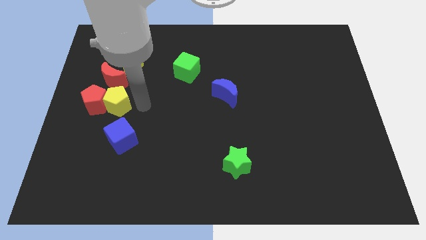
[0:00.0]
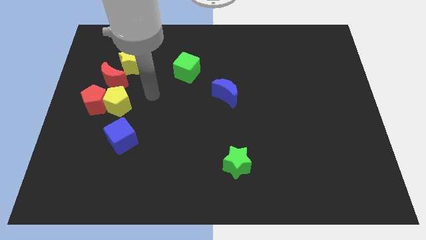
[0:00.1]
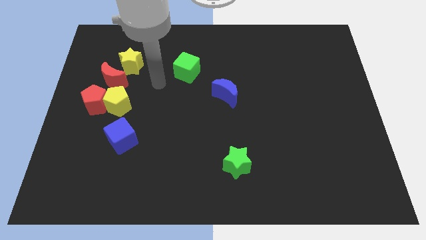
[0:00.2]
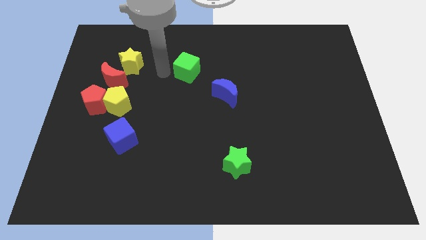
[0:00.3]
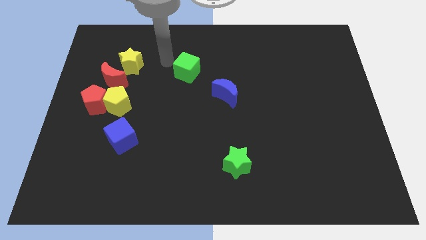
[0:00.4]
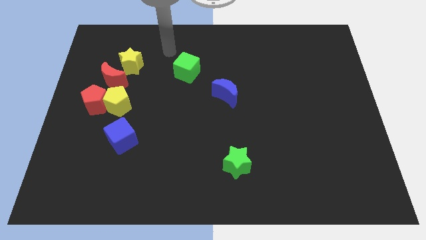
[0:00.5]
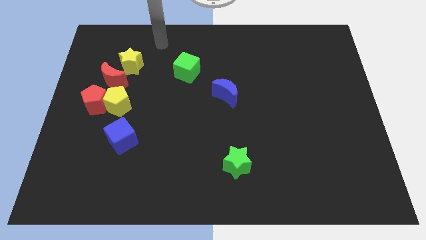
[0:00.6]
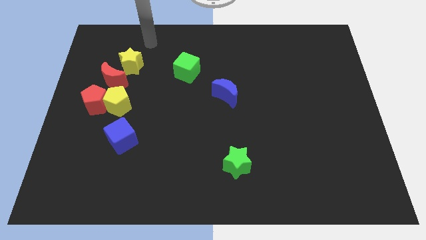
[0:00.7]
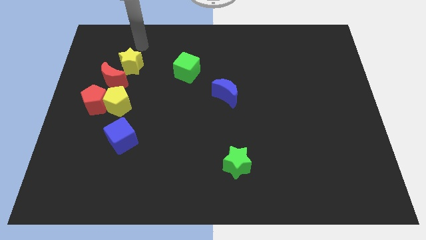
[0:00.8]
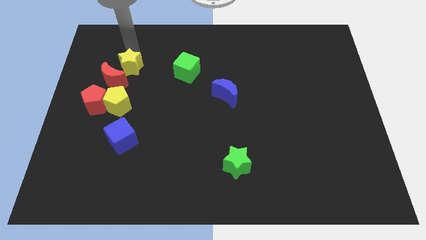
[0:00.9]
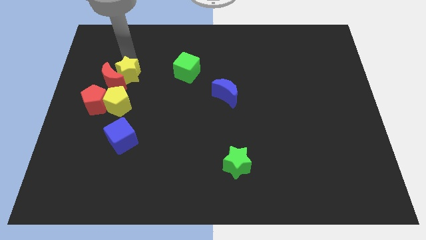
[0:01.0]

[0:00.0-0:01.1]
slightly push the yellow star towards the red crescent

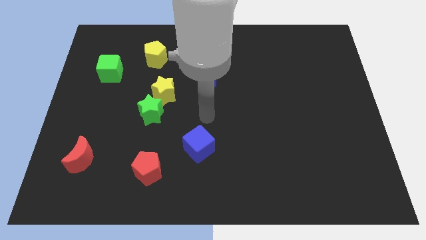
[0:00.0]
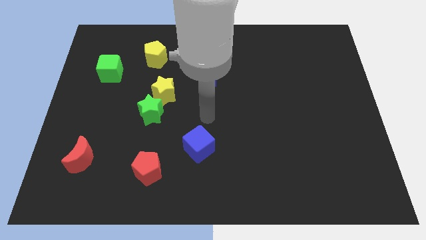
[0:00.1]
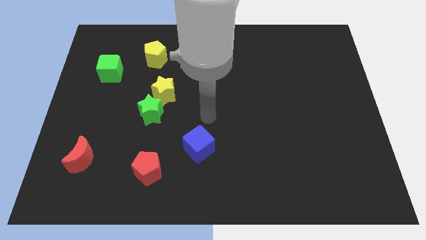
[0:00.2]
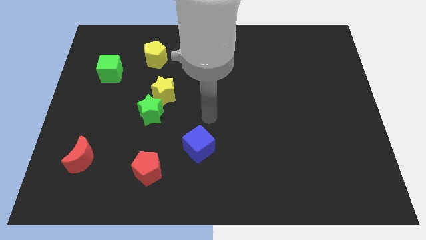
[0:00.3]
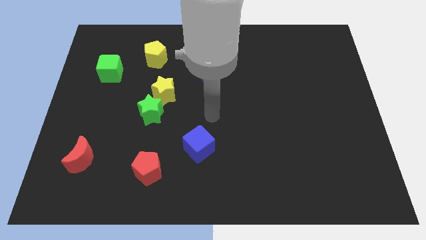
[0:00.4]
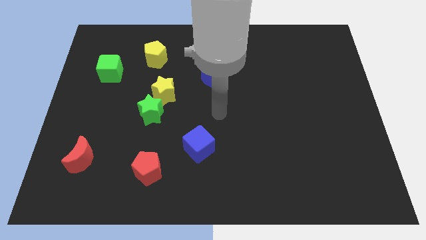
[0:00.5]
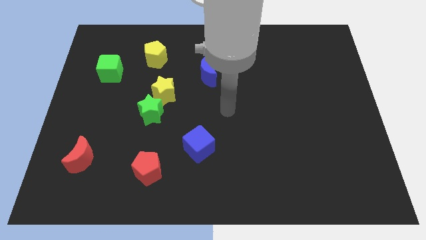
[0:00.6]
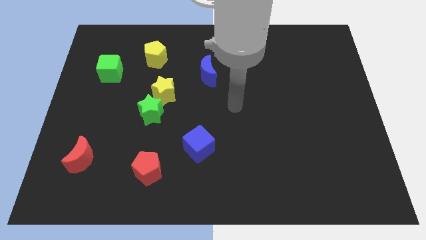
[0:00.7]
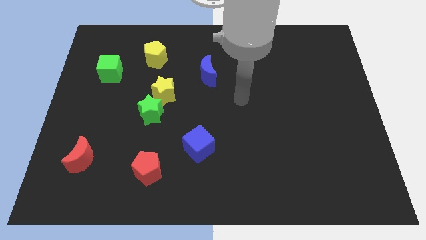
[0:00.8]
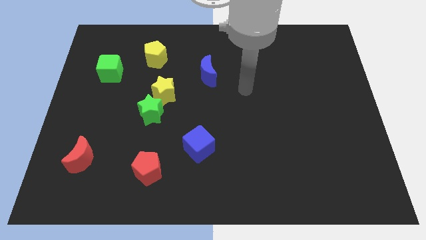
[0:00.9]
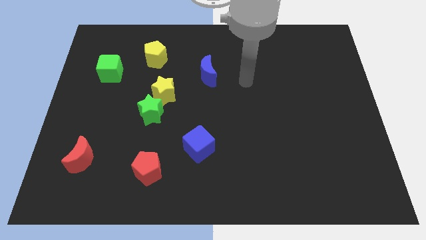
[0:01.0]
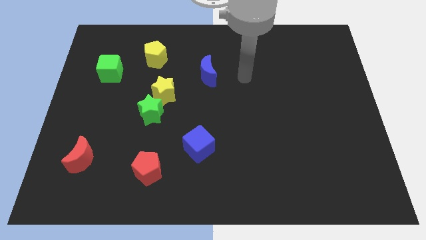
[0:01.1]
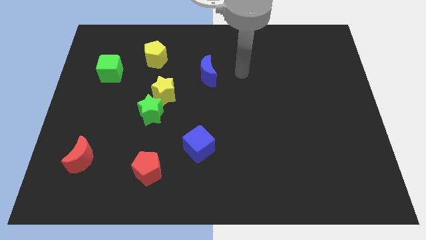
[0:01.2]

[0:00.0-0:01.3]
move your arm to the right side of the blue crescent

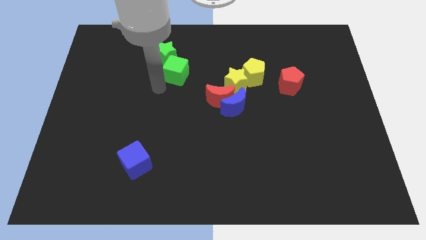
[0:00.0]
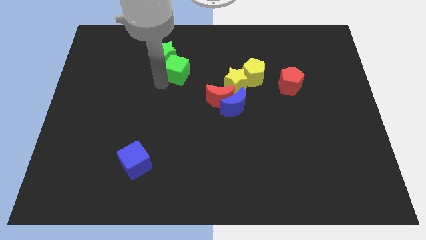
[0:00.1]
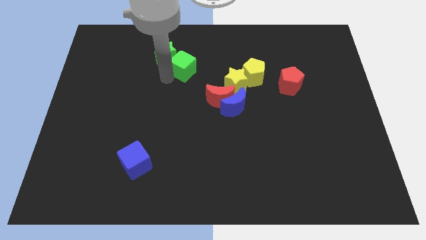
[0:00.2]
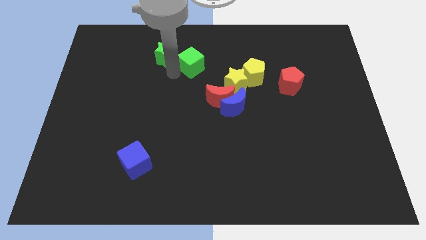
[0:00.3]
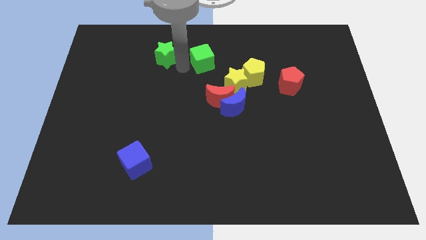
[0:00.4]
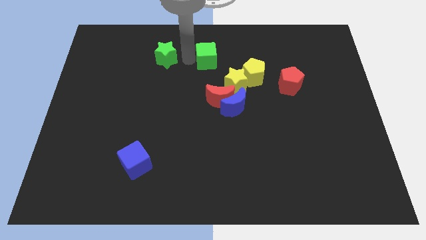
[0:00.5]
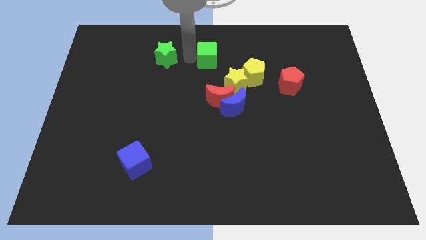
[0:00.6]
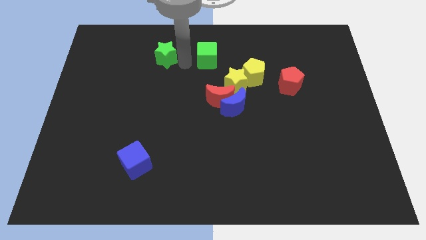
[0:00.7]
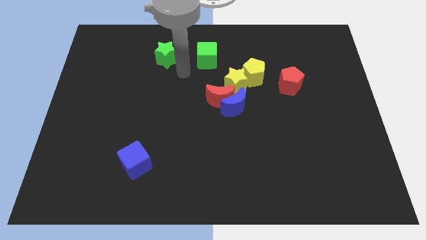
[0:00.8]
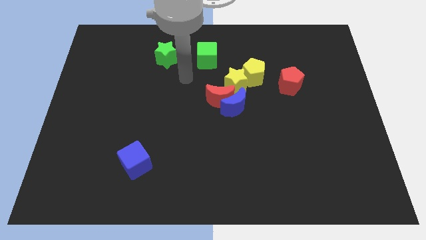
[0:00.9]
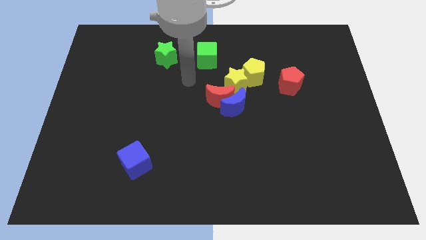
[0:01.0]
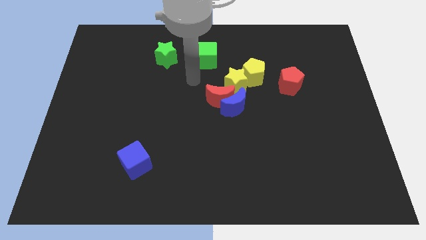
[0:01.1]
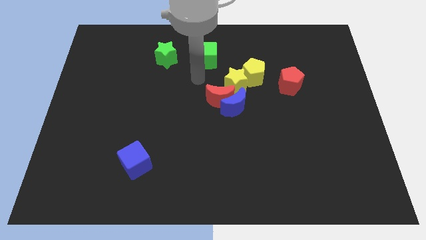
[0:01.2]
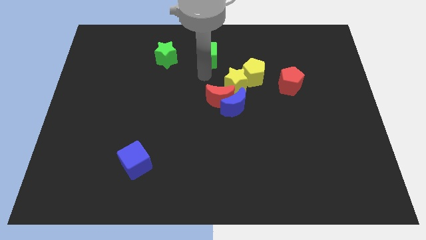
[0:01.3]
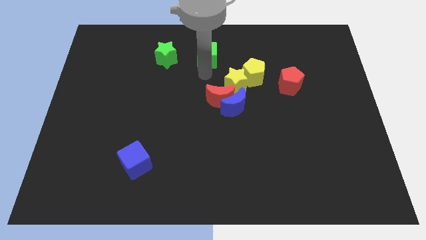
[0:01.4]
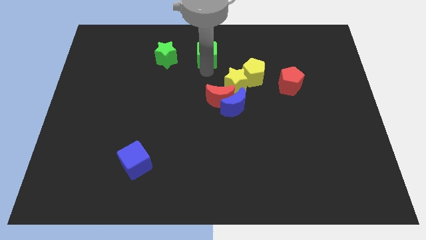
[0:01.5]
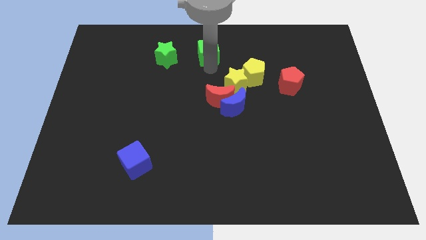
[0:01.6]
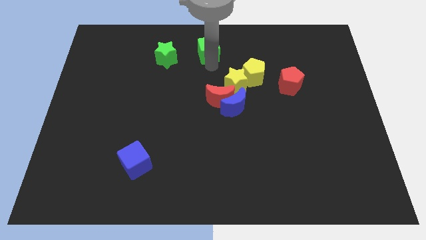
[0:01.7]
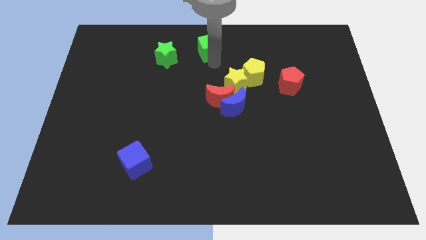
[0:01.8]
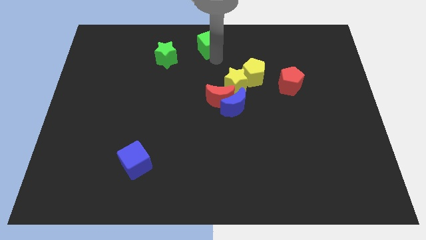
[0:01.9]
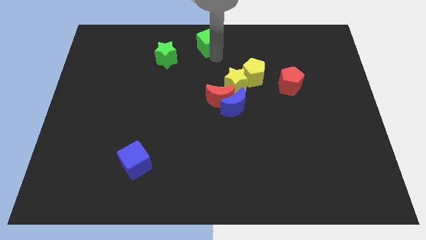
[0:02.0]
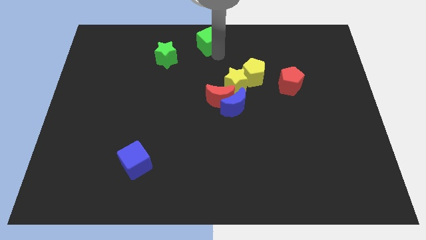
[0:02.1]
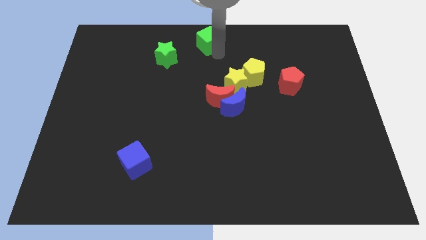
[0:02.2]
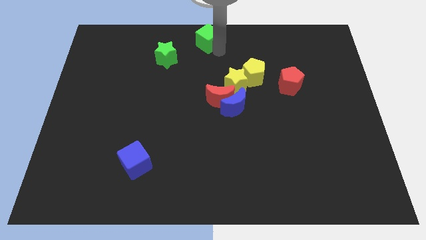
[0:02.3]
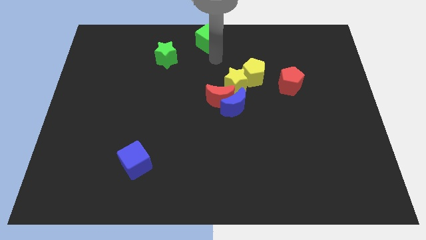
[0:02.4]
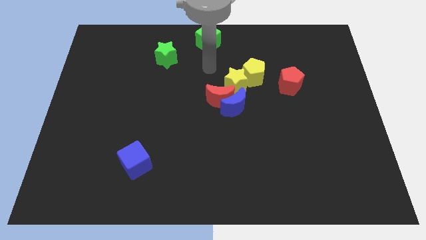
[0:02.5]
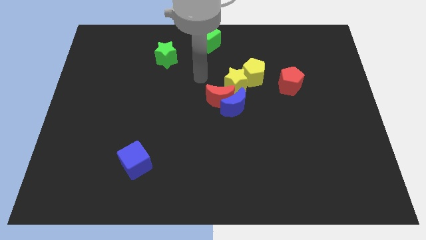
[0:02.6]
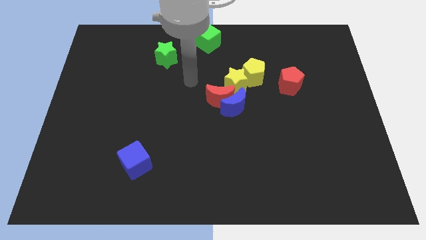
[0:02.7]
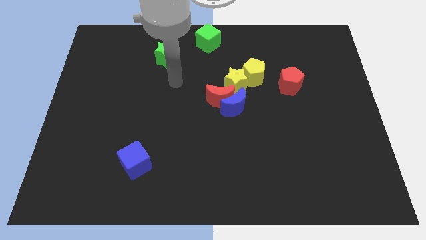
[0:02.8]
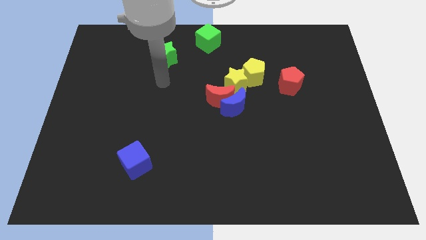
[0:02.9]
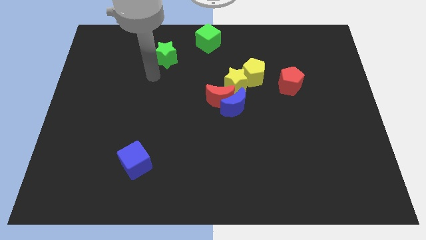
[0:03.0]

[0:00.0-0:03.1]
push the green cube to the top center of the board

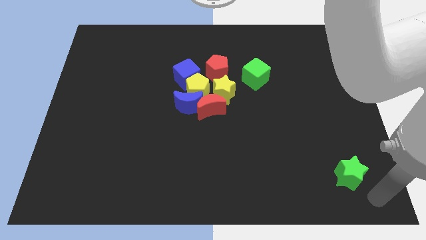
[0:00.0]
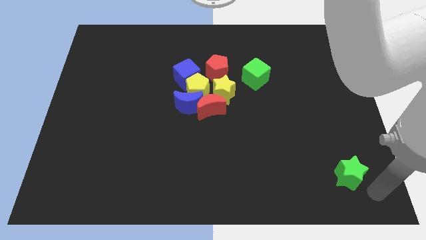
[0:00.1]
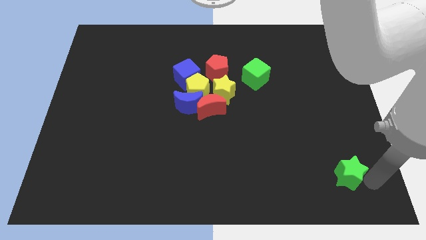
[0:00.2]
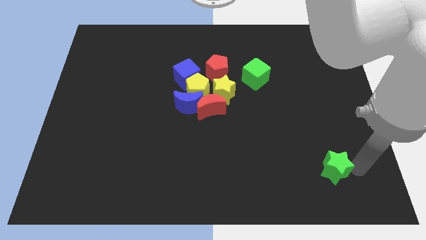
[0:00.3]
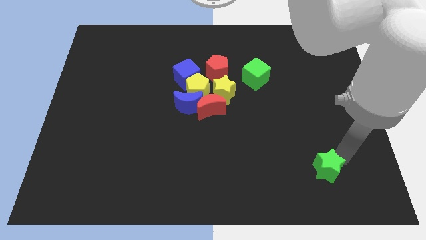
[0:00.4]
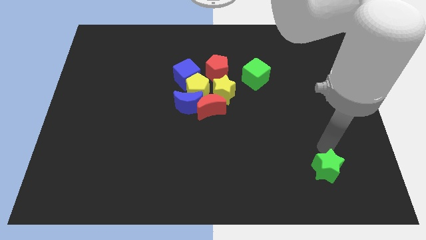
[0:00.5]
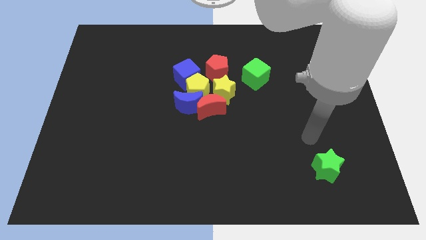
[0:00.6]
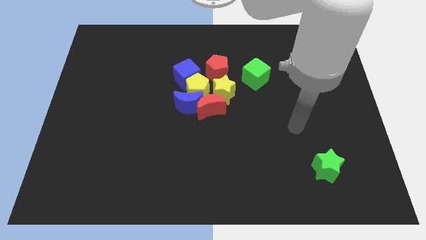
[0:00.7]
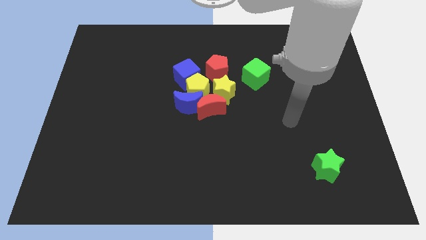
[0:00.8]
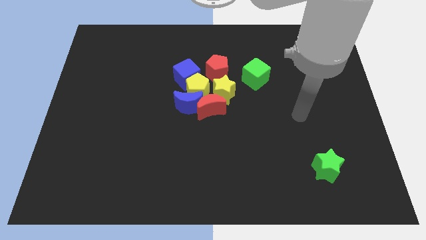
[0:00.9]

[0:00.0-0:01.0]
push the green star towards the center of the board

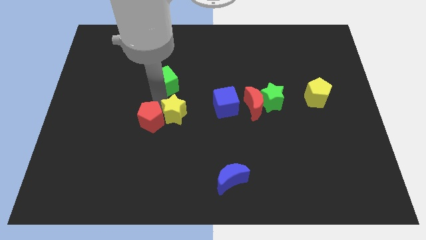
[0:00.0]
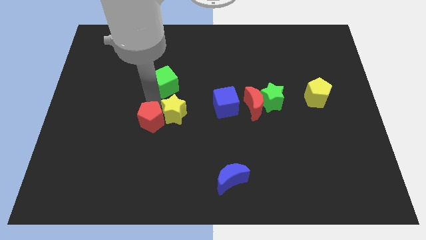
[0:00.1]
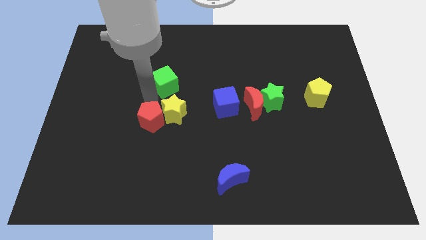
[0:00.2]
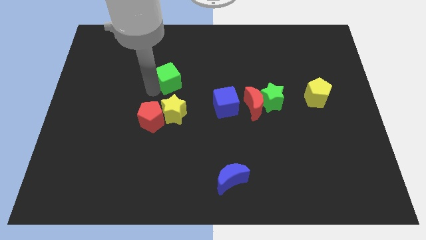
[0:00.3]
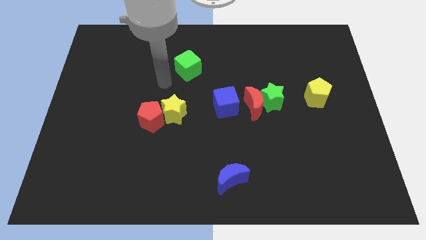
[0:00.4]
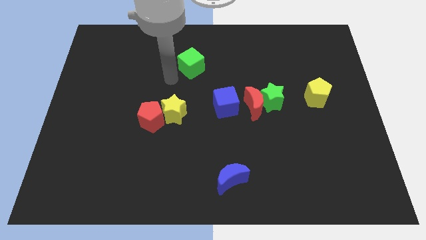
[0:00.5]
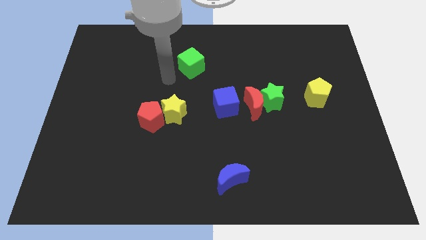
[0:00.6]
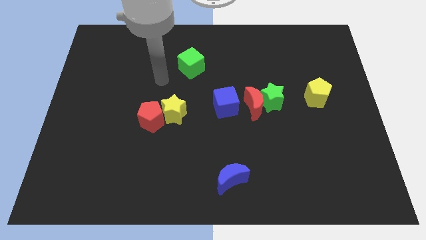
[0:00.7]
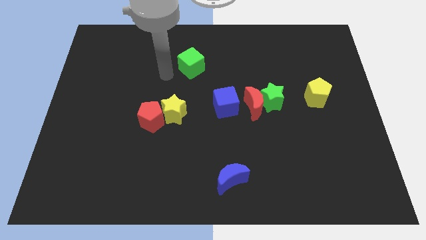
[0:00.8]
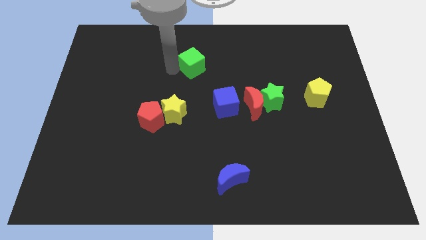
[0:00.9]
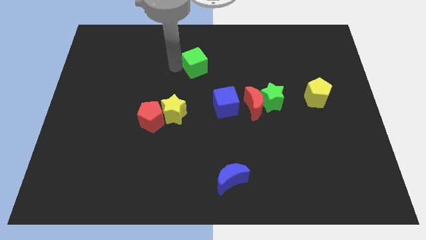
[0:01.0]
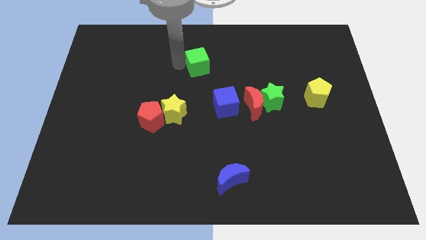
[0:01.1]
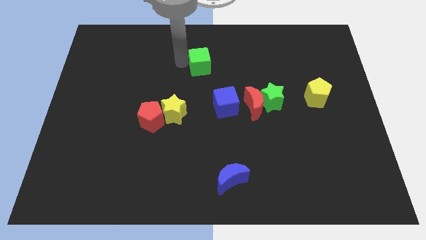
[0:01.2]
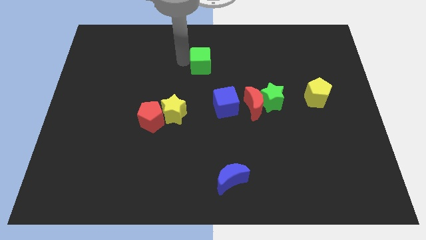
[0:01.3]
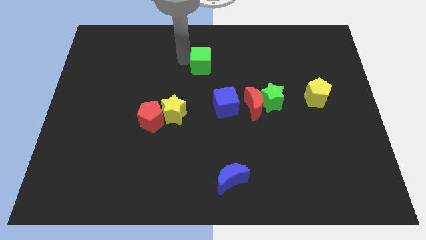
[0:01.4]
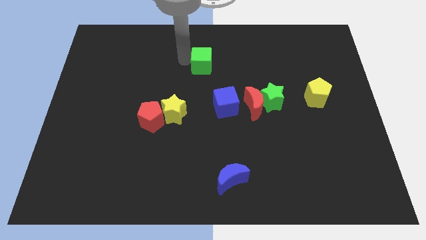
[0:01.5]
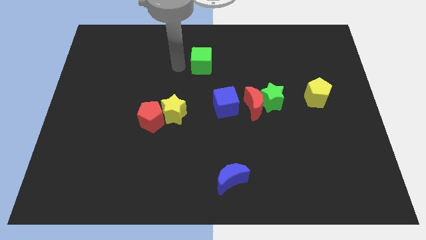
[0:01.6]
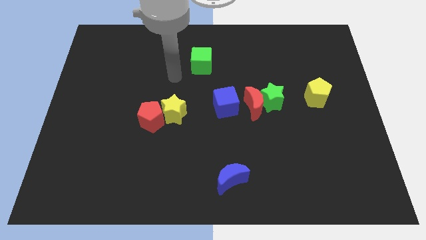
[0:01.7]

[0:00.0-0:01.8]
move the green cube to the top left of the blue cube

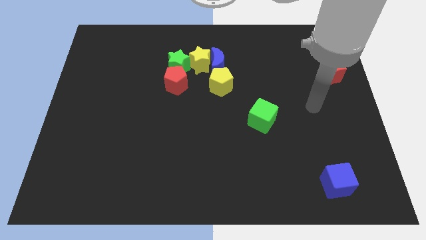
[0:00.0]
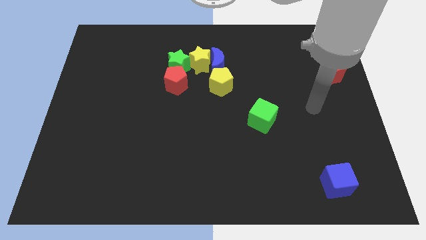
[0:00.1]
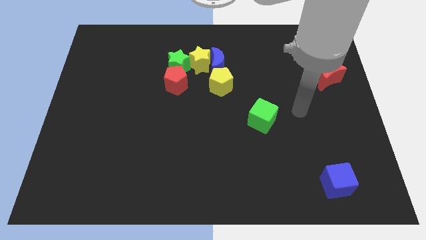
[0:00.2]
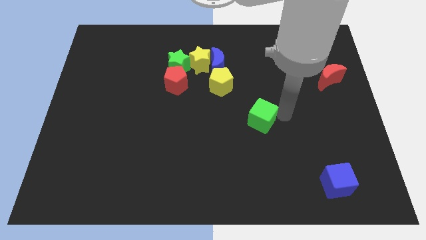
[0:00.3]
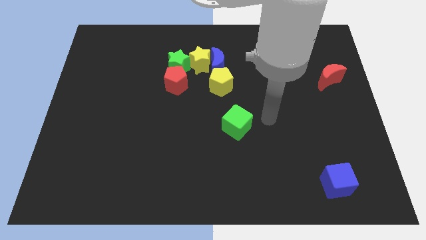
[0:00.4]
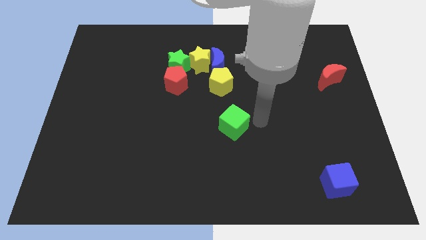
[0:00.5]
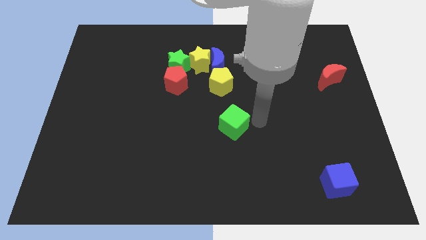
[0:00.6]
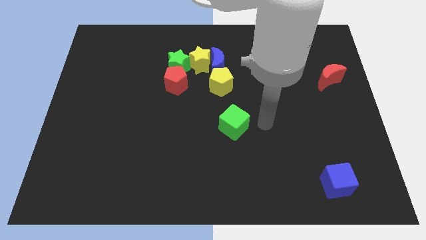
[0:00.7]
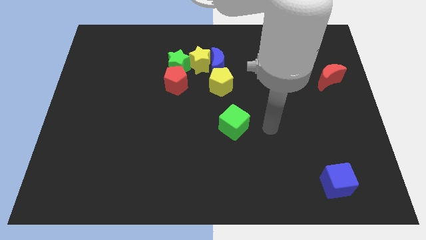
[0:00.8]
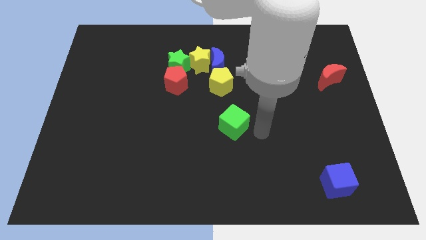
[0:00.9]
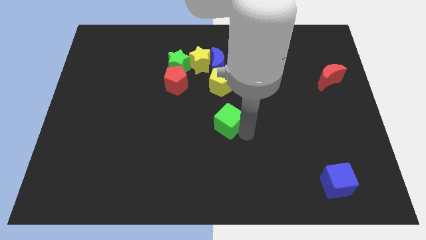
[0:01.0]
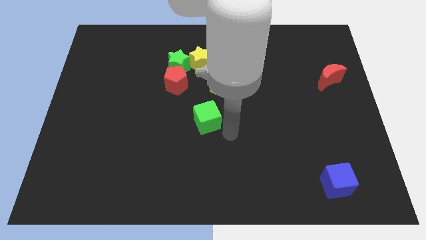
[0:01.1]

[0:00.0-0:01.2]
push the green cube to the center of the board
